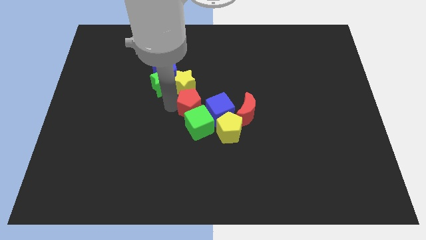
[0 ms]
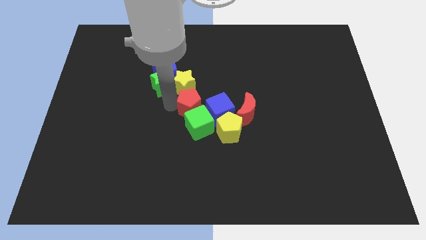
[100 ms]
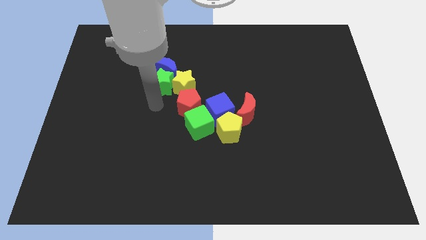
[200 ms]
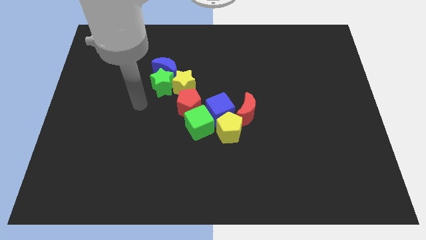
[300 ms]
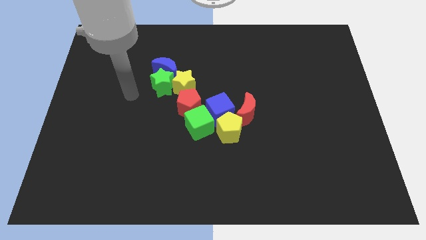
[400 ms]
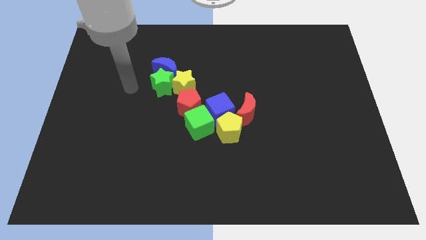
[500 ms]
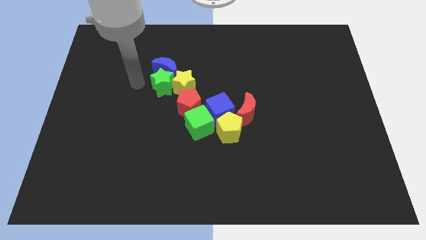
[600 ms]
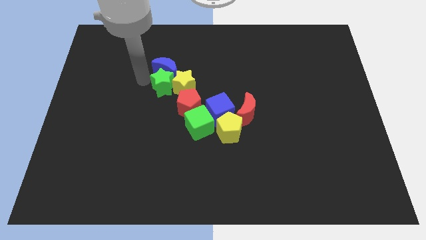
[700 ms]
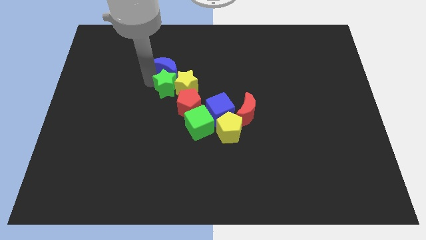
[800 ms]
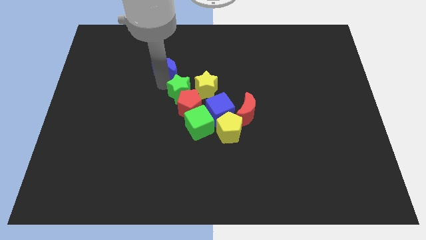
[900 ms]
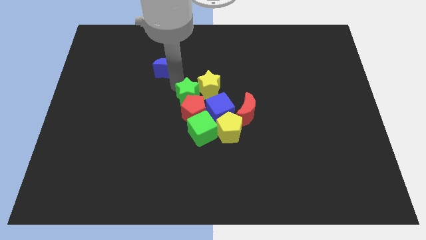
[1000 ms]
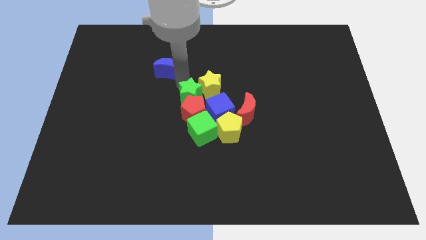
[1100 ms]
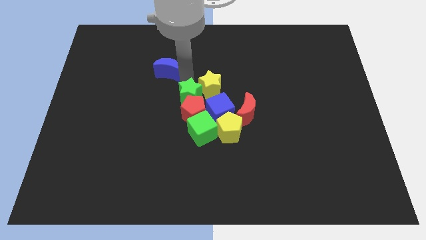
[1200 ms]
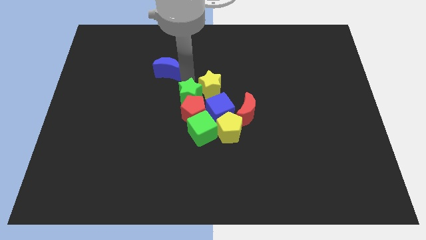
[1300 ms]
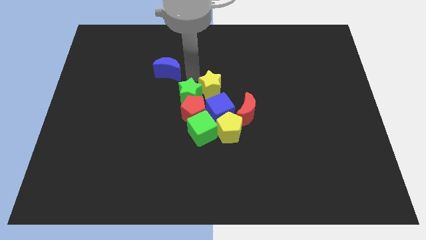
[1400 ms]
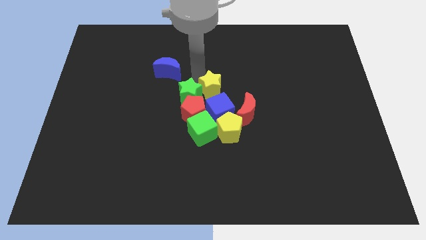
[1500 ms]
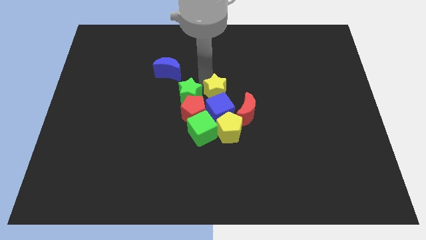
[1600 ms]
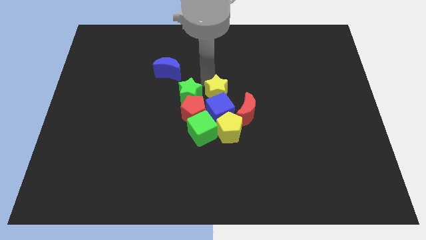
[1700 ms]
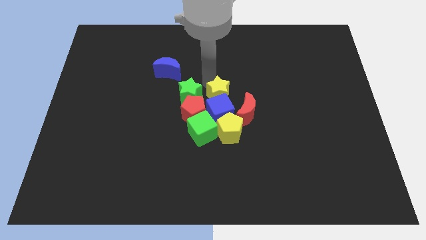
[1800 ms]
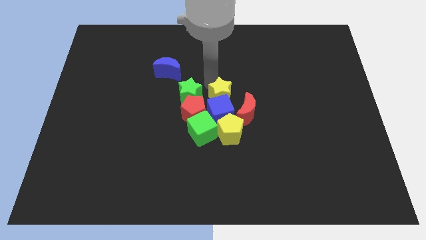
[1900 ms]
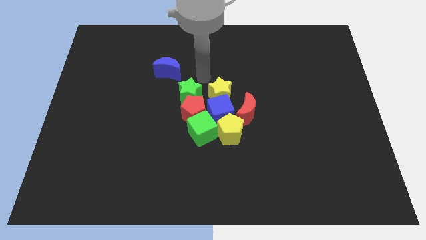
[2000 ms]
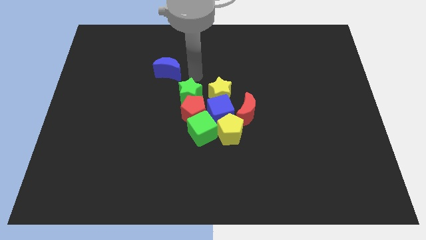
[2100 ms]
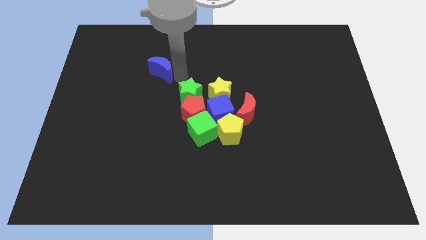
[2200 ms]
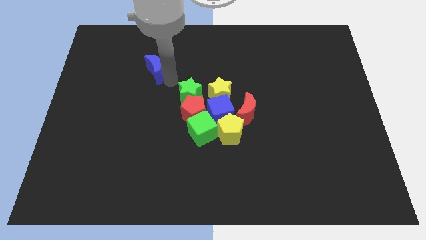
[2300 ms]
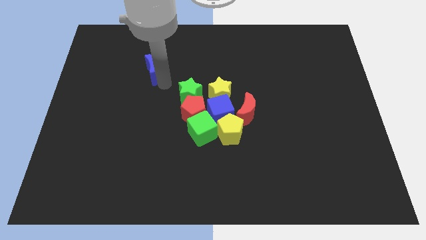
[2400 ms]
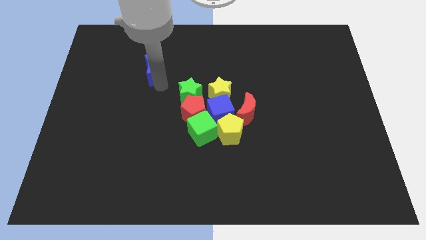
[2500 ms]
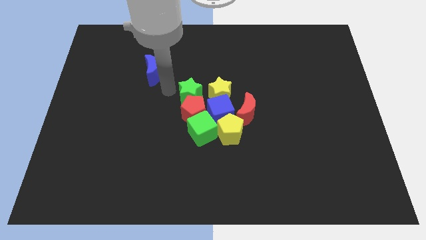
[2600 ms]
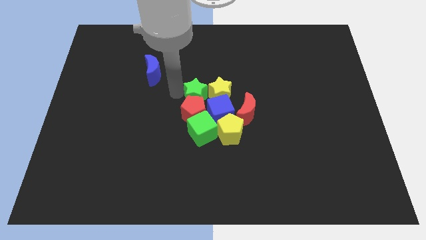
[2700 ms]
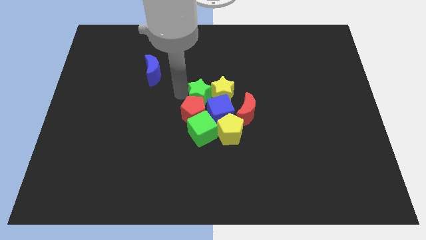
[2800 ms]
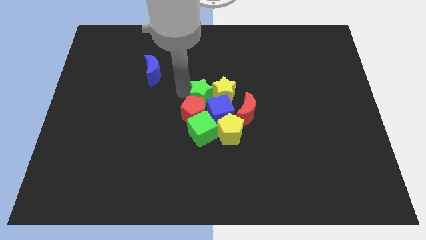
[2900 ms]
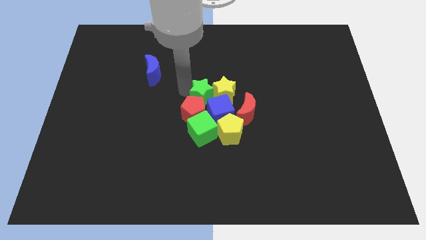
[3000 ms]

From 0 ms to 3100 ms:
move the green star and yellow star into the group of blocks

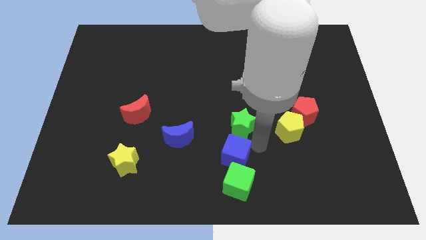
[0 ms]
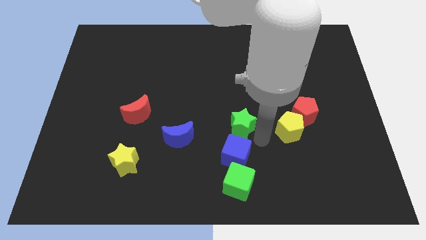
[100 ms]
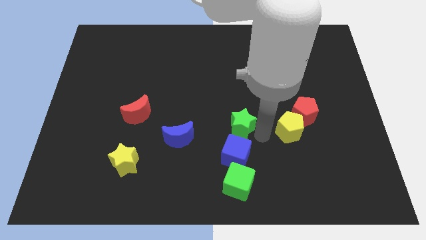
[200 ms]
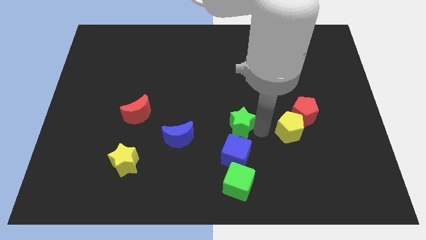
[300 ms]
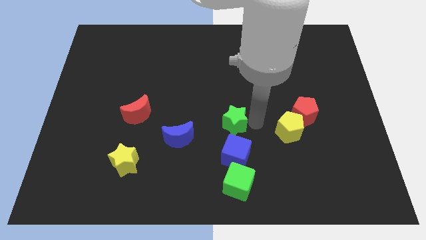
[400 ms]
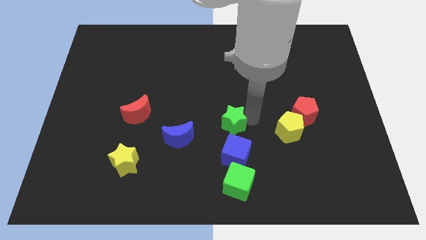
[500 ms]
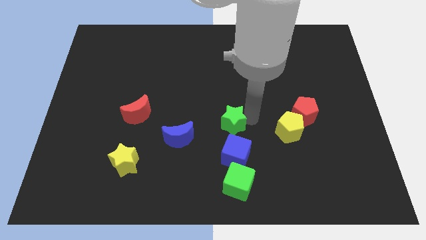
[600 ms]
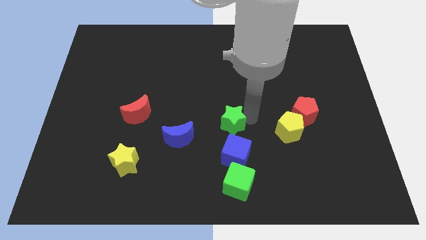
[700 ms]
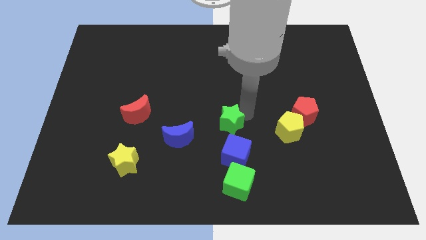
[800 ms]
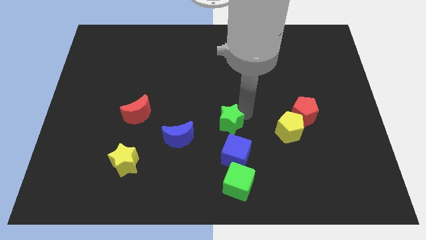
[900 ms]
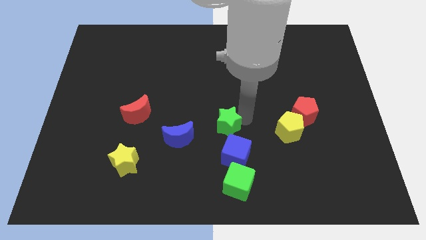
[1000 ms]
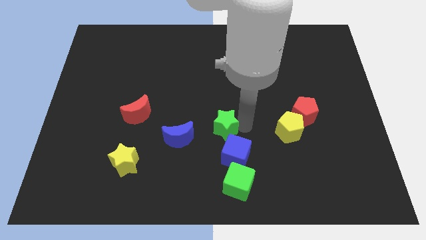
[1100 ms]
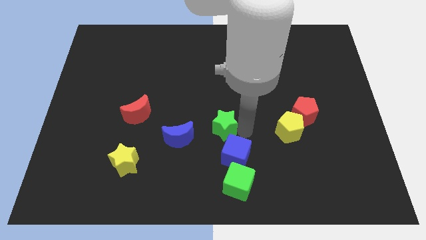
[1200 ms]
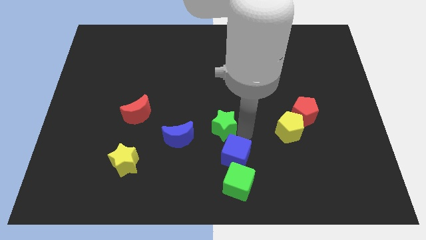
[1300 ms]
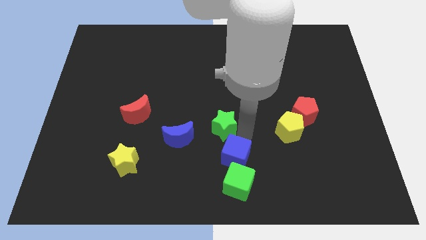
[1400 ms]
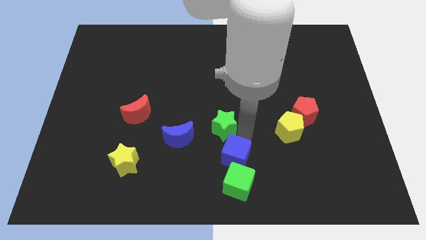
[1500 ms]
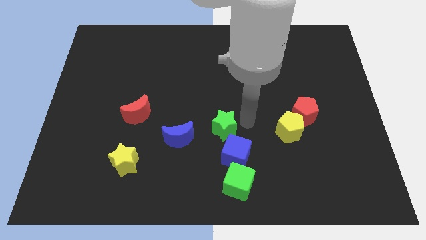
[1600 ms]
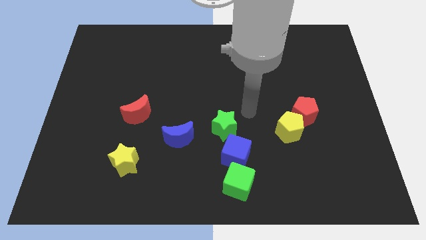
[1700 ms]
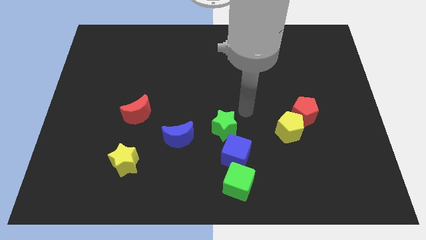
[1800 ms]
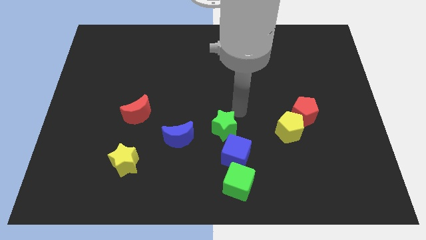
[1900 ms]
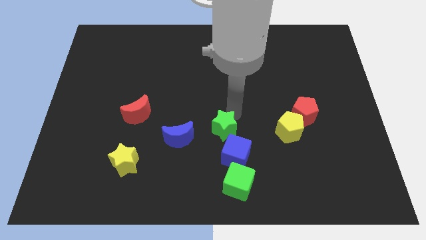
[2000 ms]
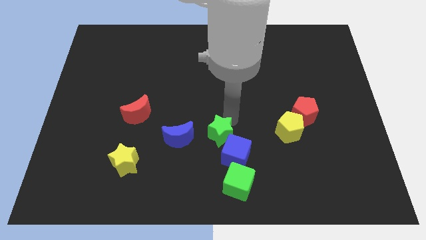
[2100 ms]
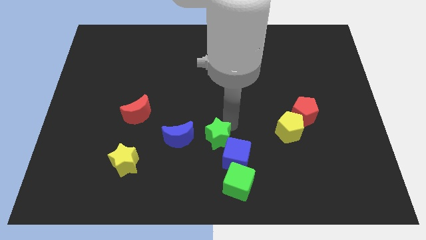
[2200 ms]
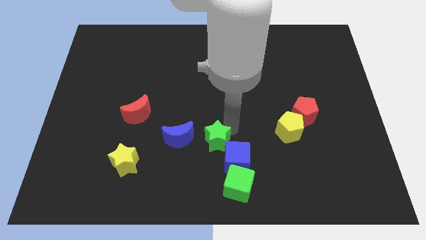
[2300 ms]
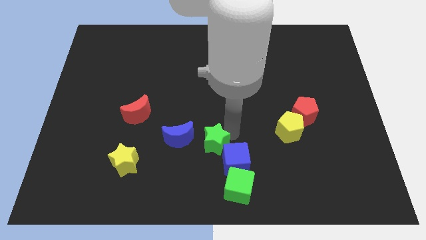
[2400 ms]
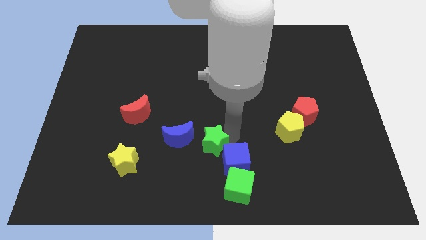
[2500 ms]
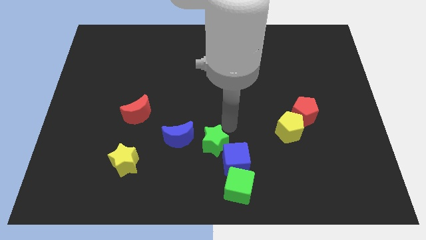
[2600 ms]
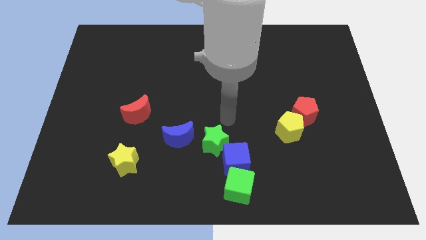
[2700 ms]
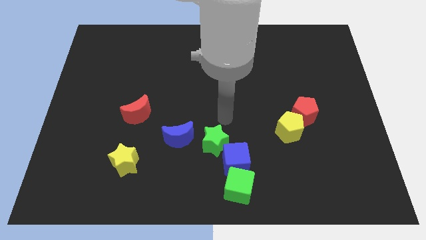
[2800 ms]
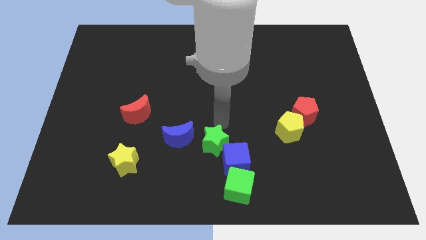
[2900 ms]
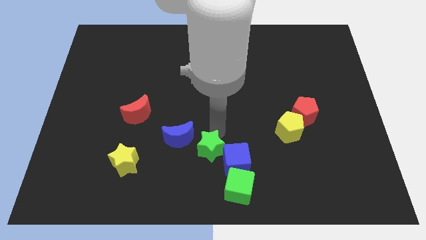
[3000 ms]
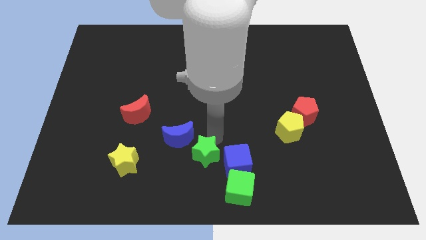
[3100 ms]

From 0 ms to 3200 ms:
push the green star close to the blue semicircle

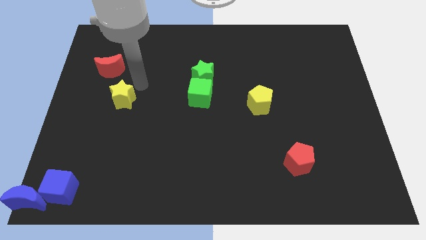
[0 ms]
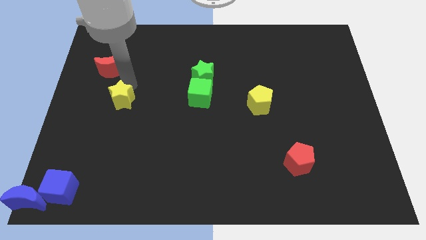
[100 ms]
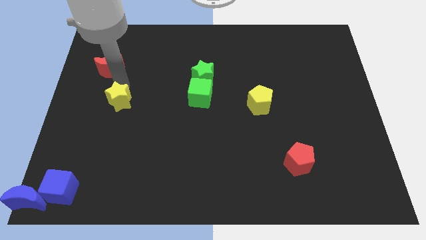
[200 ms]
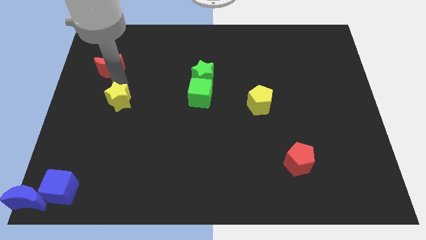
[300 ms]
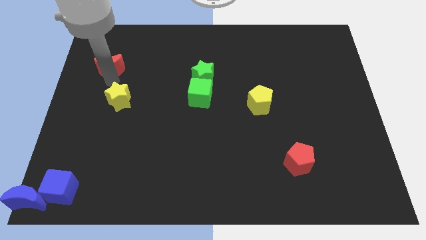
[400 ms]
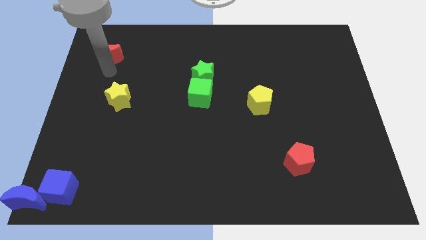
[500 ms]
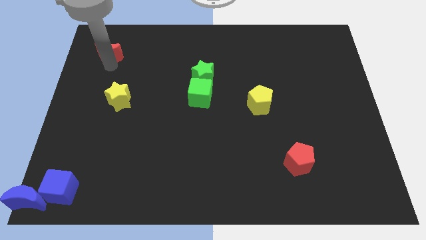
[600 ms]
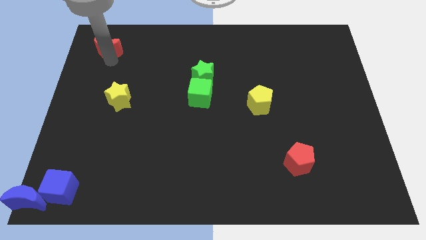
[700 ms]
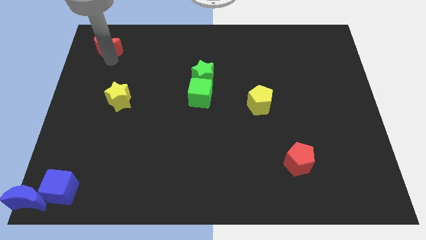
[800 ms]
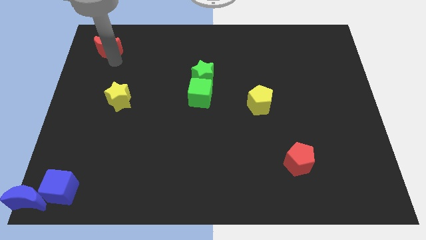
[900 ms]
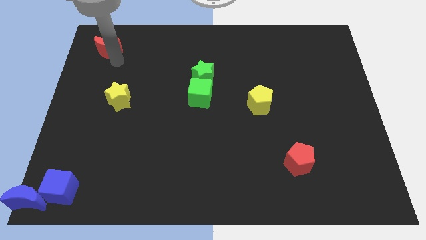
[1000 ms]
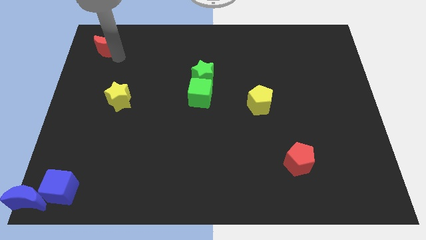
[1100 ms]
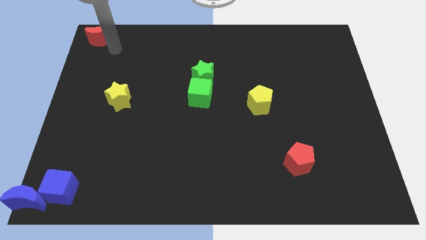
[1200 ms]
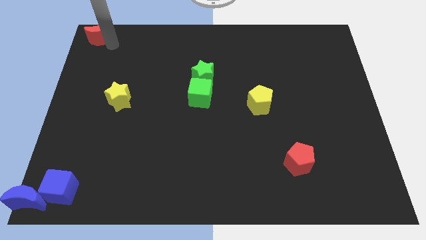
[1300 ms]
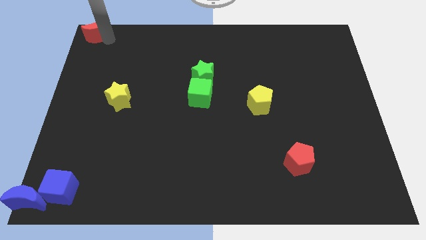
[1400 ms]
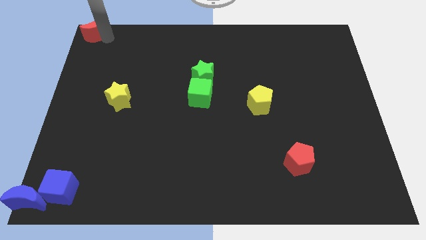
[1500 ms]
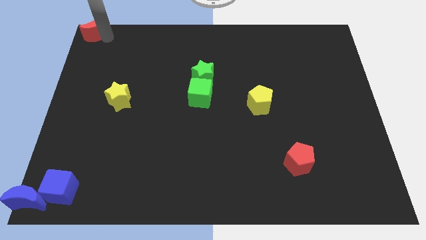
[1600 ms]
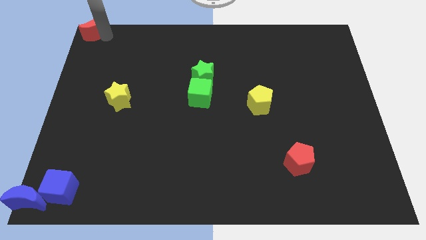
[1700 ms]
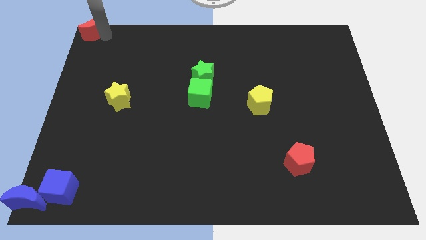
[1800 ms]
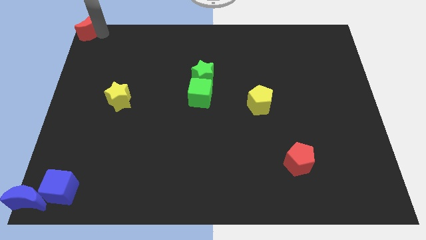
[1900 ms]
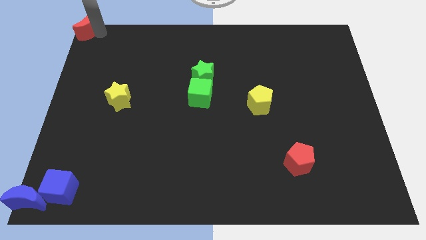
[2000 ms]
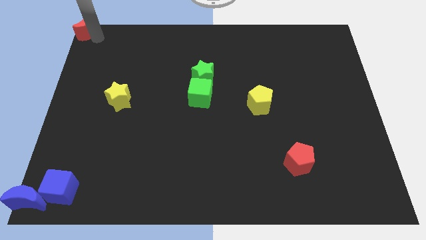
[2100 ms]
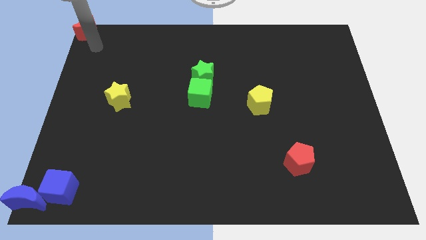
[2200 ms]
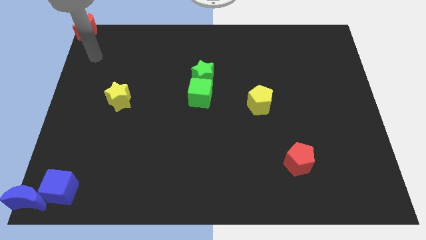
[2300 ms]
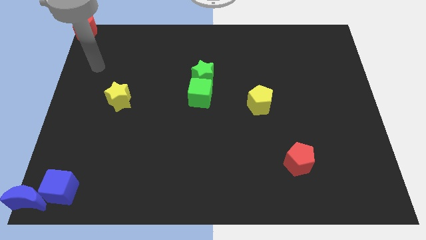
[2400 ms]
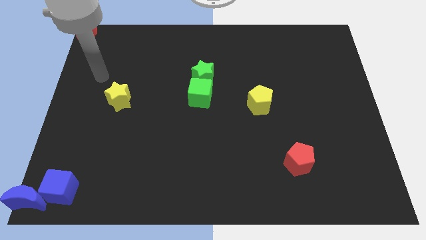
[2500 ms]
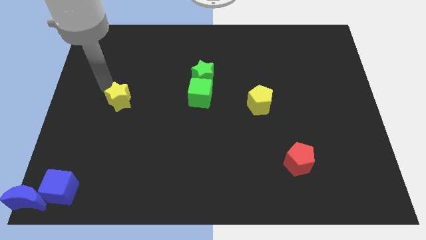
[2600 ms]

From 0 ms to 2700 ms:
push the red crescent to the top left corner of the board

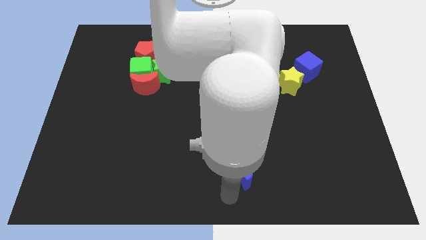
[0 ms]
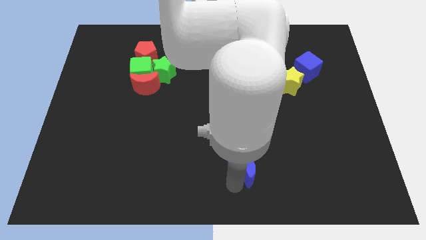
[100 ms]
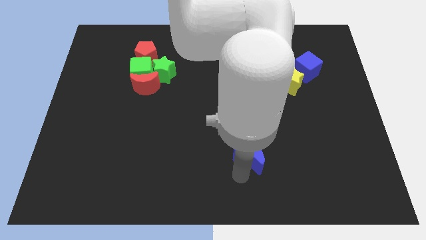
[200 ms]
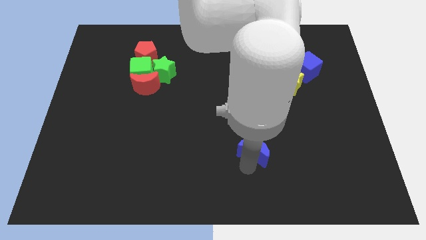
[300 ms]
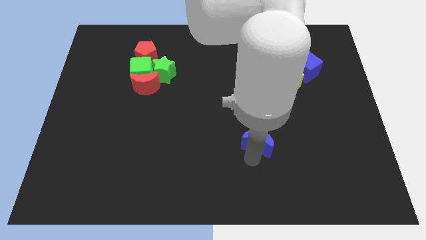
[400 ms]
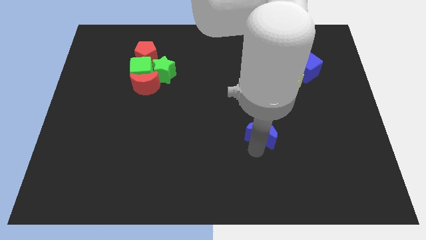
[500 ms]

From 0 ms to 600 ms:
move the blue moon top right
